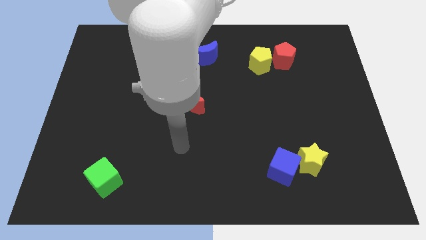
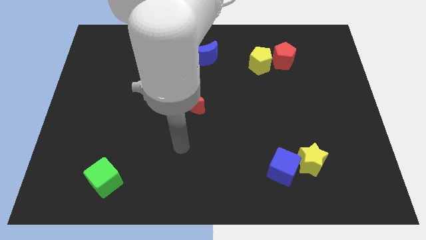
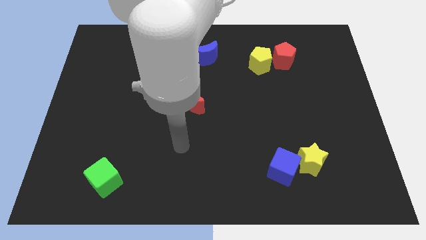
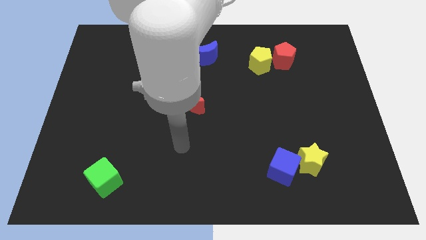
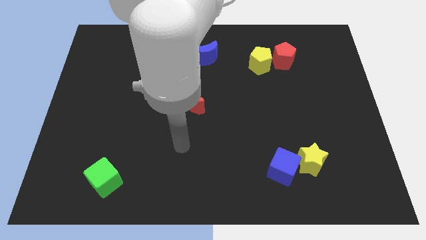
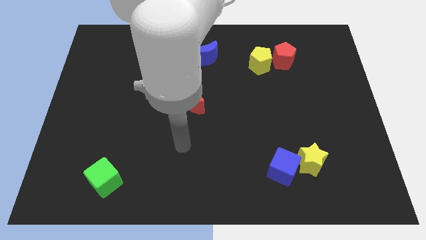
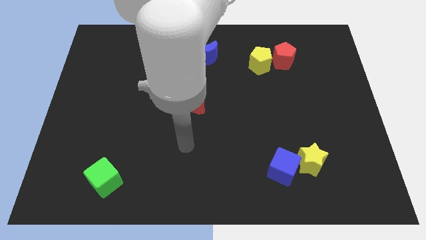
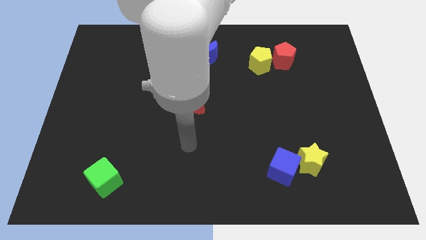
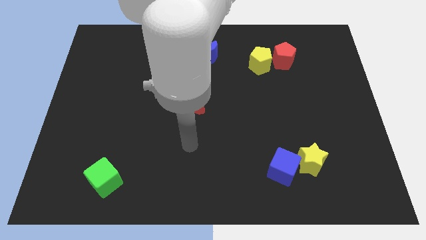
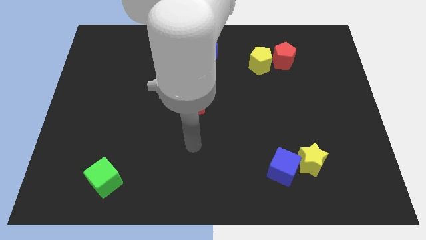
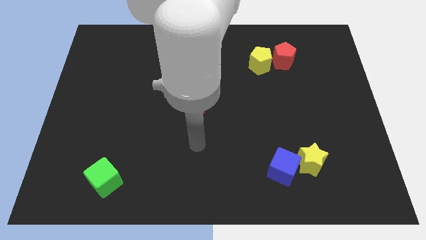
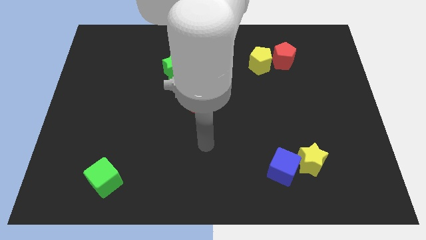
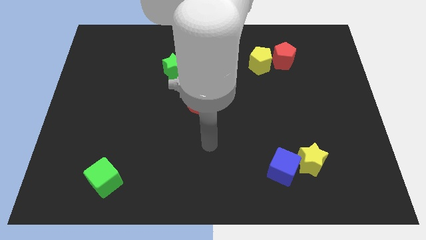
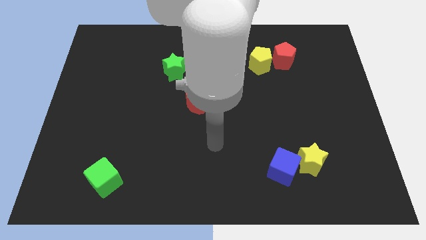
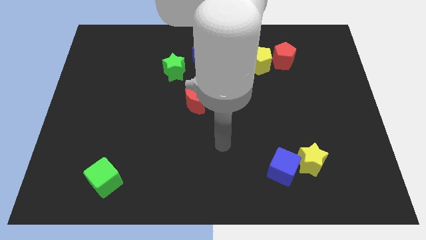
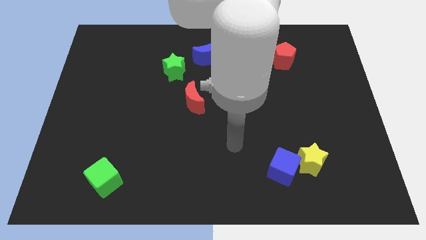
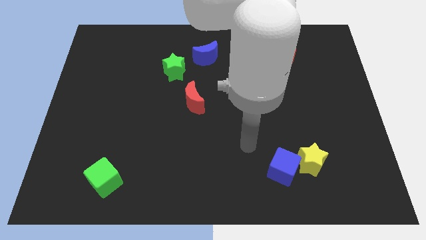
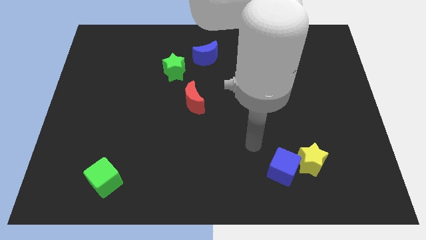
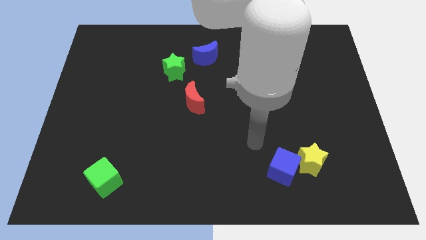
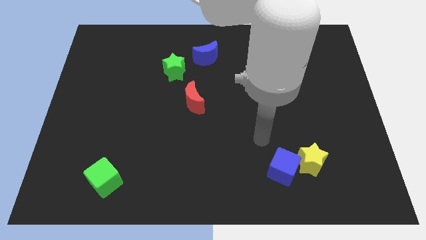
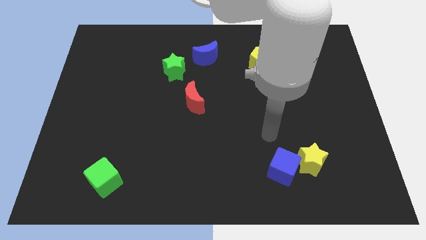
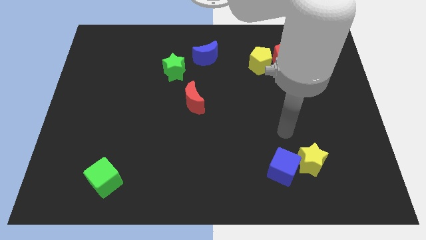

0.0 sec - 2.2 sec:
point your arm at the top of the blue cube

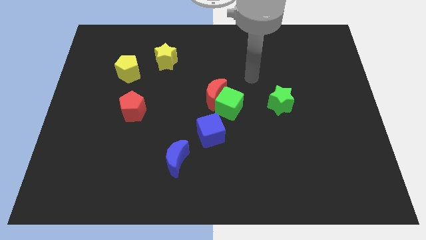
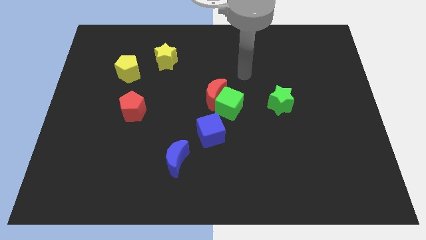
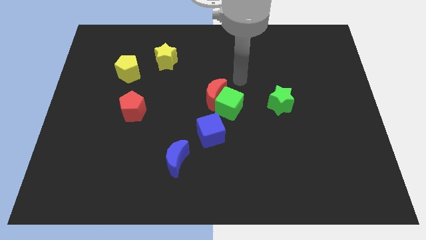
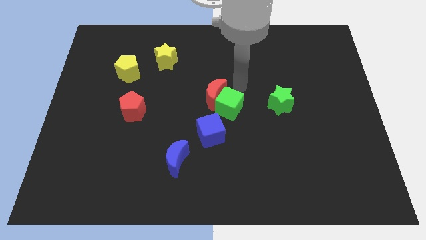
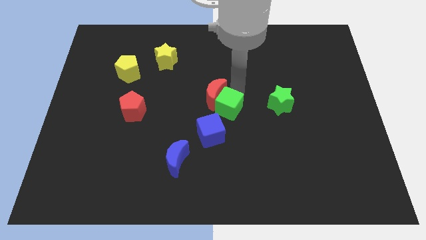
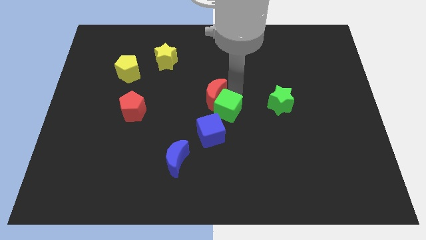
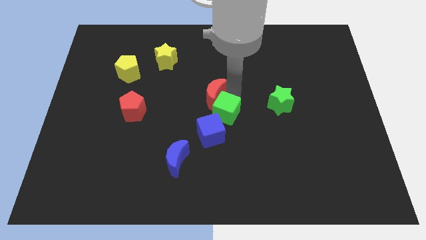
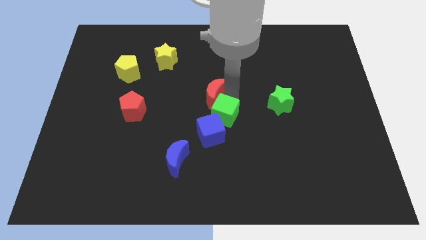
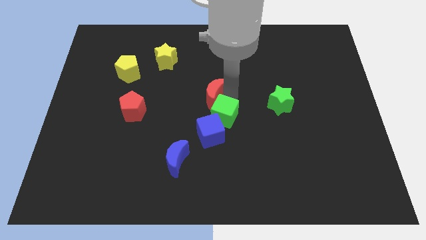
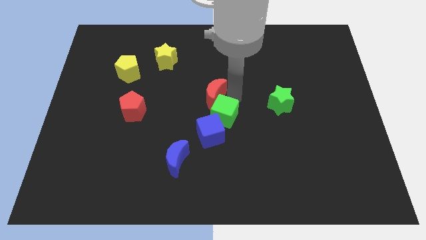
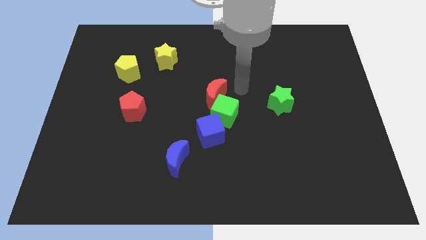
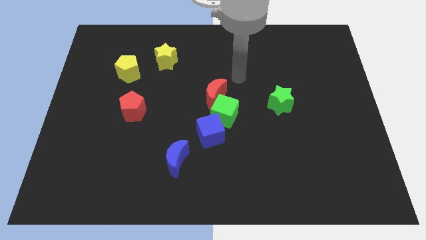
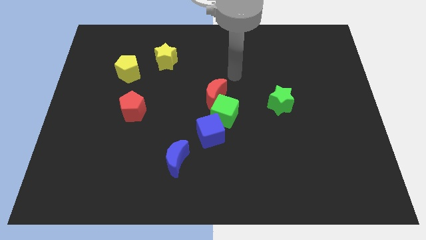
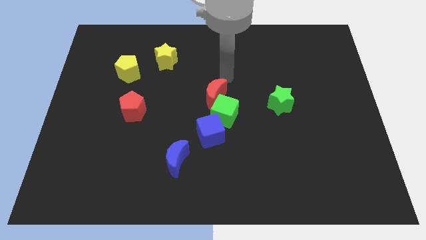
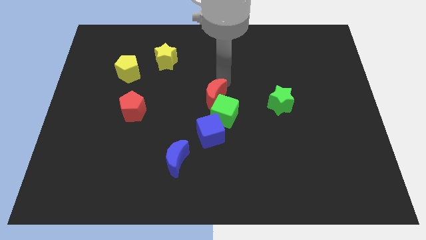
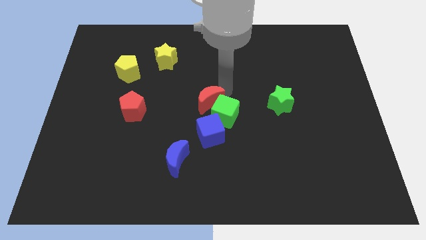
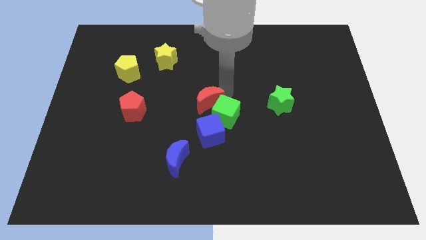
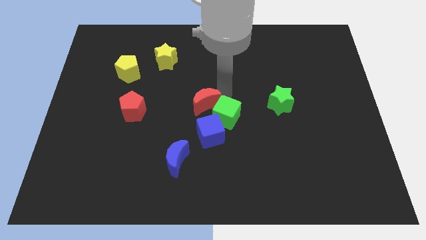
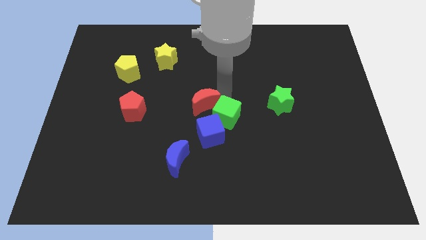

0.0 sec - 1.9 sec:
push green cube into blue cube

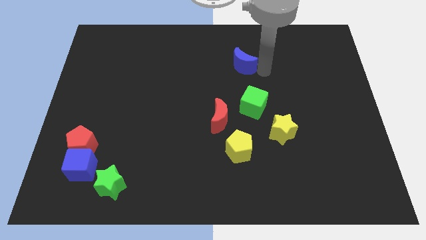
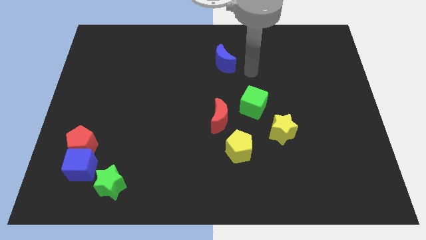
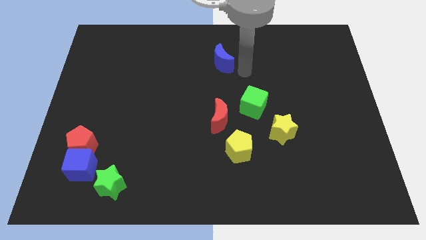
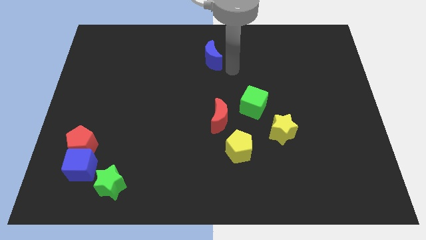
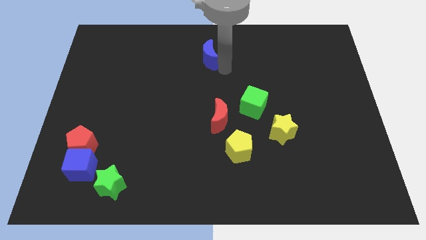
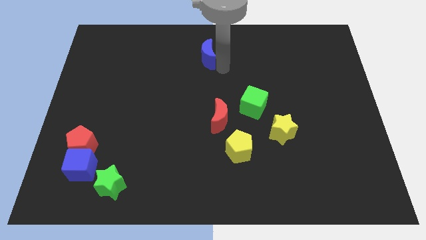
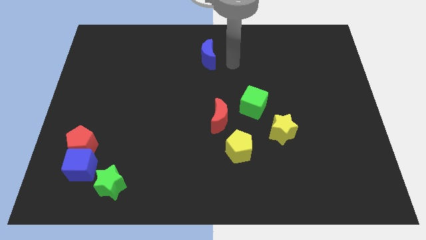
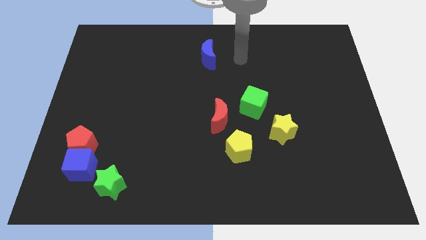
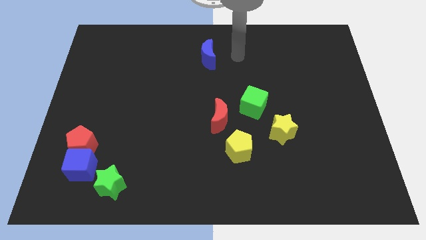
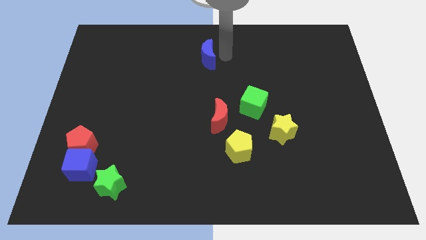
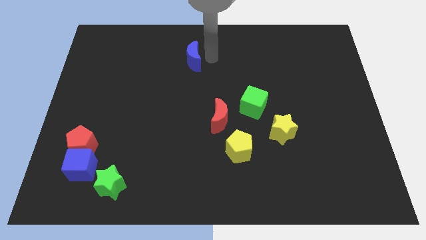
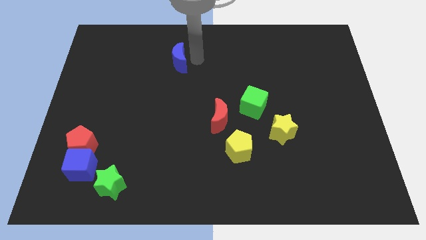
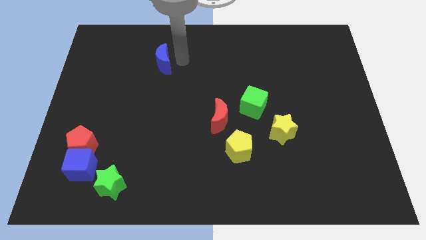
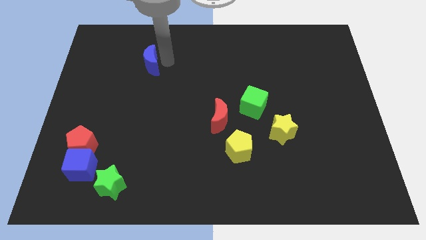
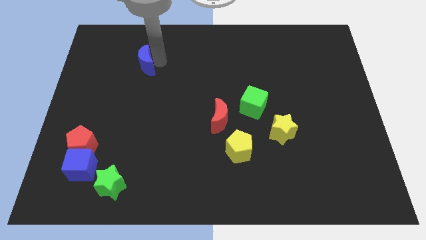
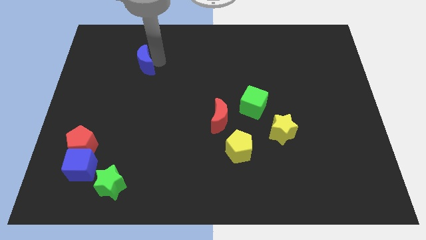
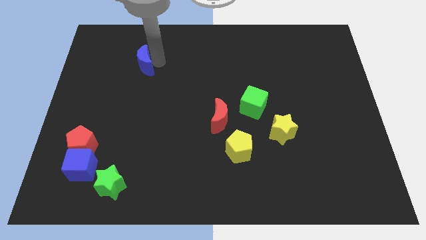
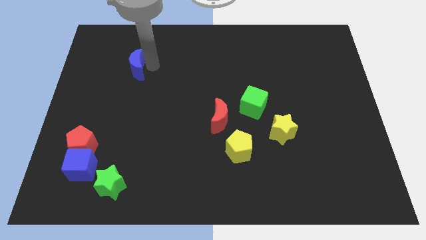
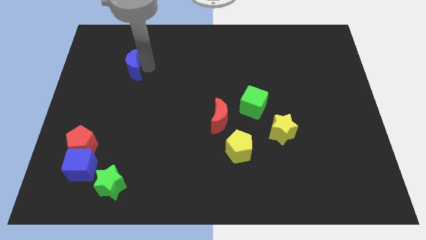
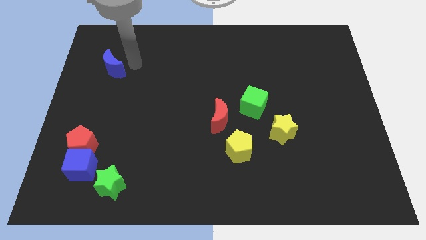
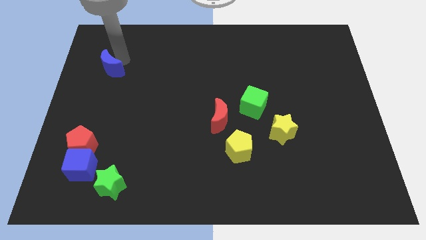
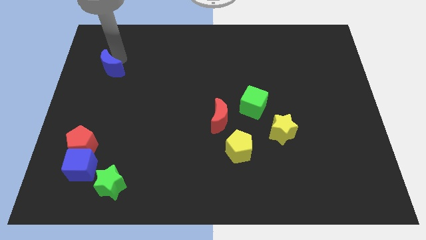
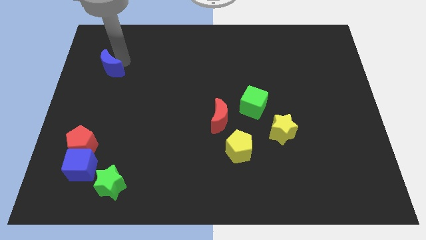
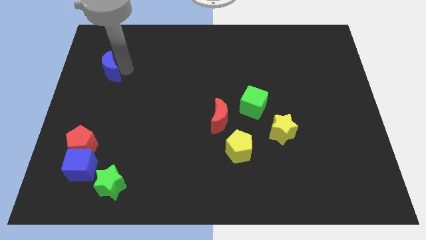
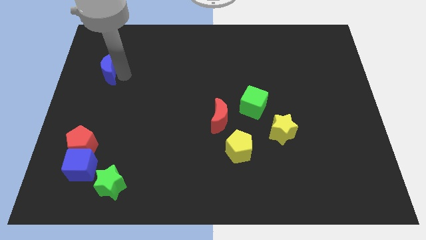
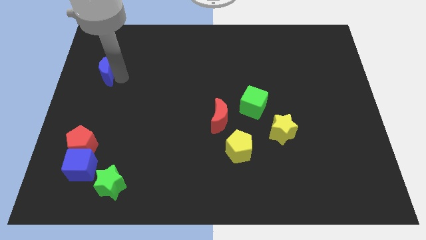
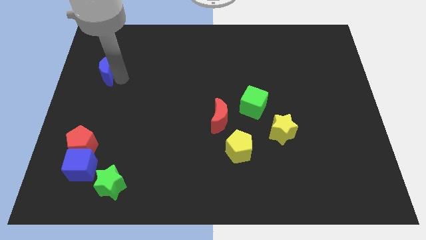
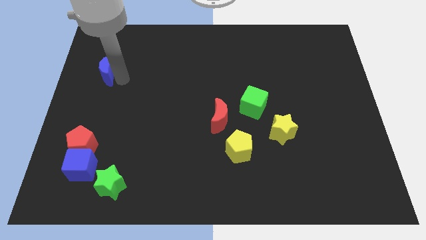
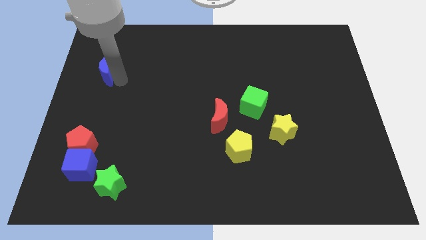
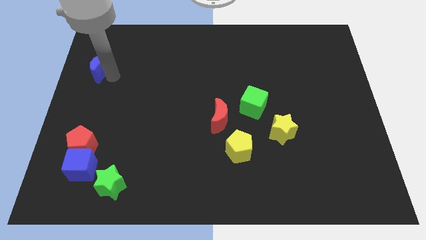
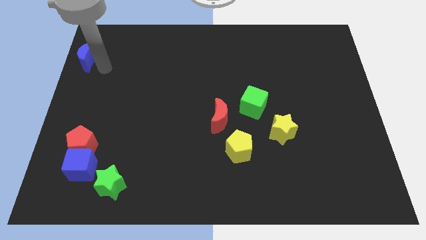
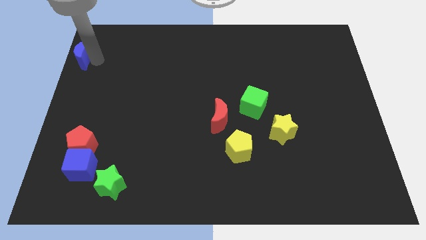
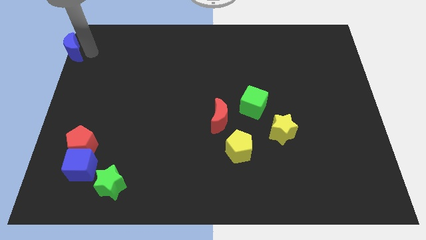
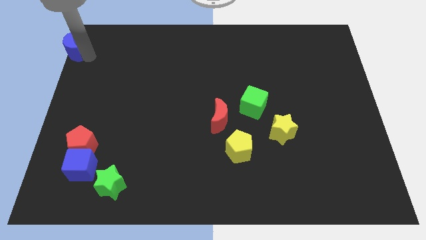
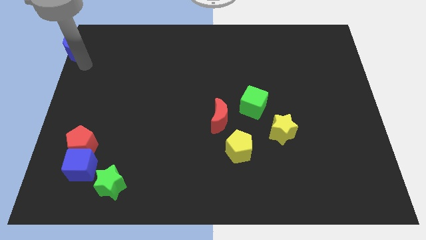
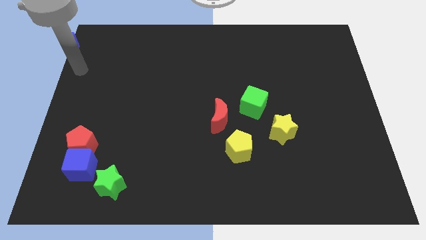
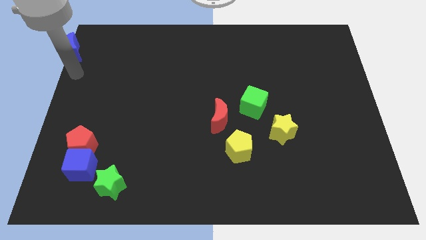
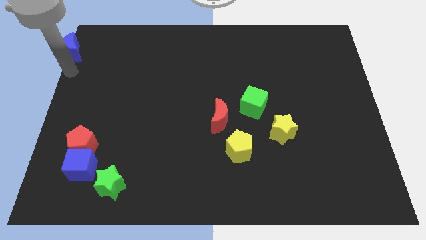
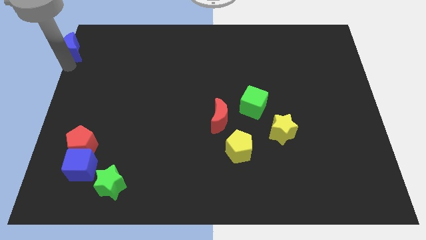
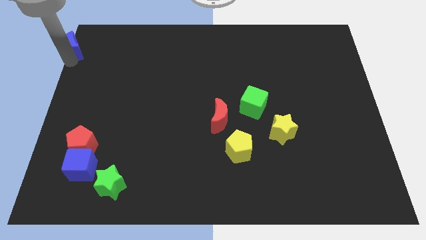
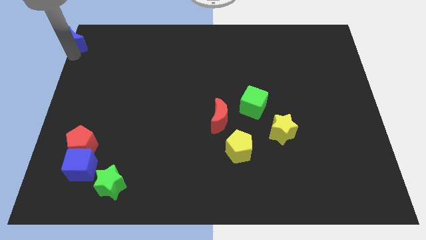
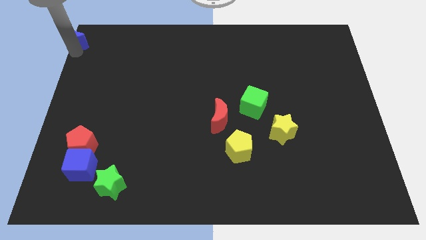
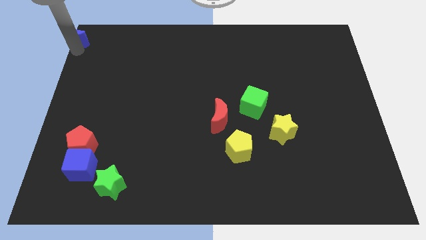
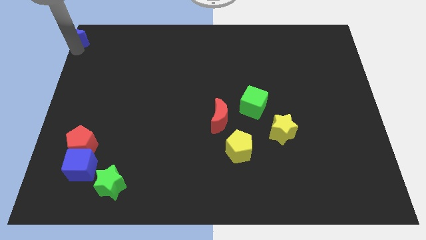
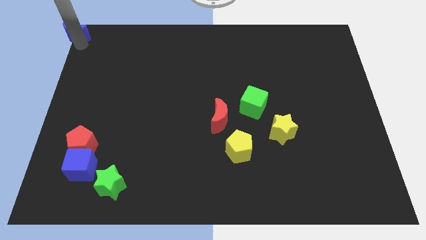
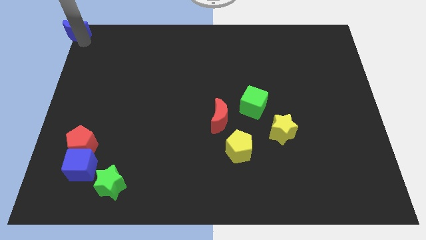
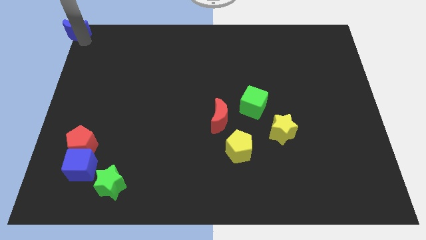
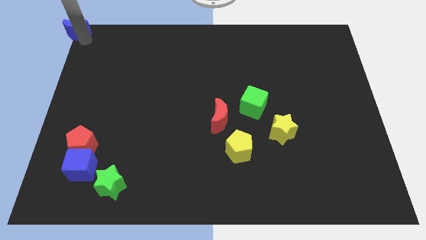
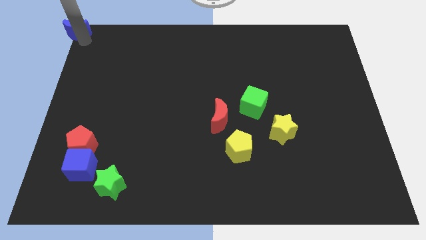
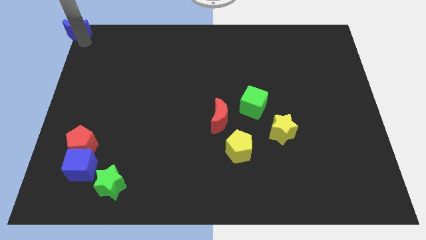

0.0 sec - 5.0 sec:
push the blue crescent to the left top of the board

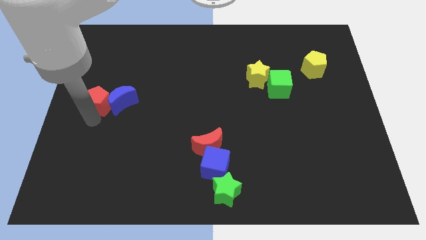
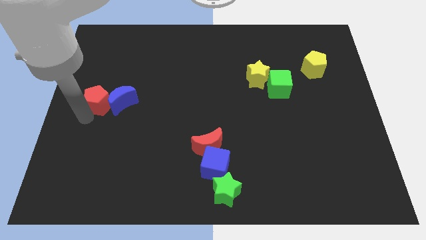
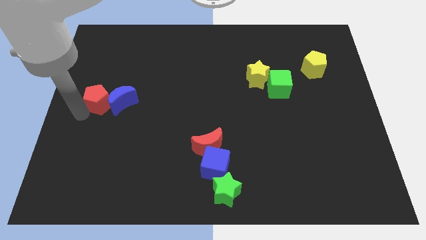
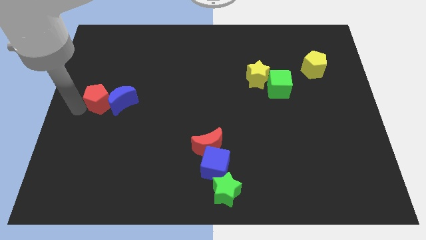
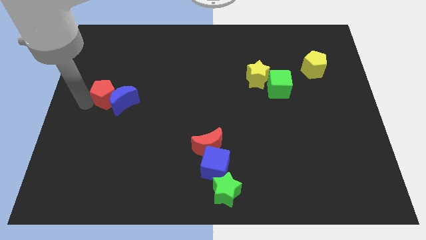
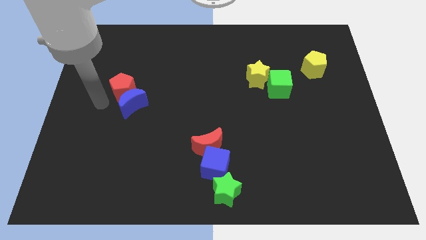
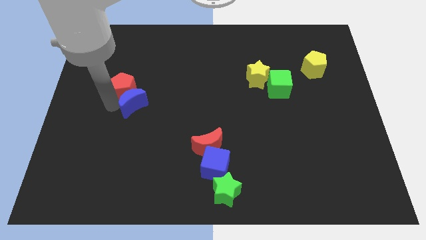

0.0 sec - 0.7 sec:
move red pentagon above the blue crescent
